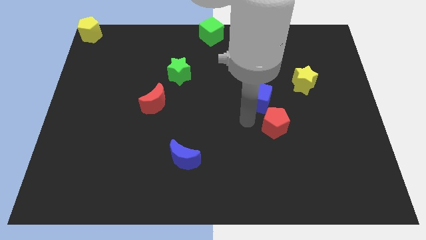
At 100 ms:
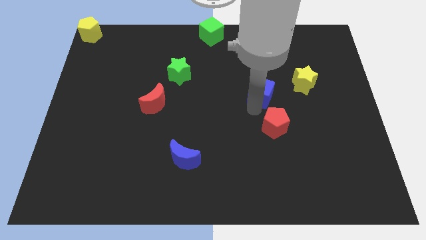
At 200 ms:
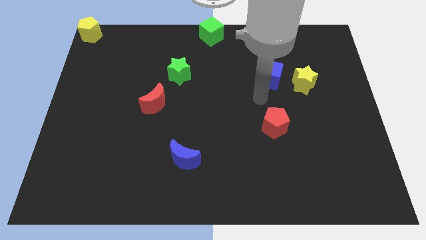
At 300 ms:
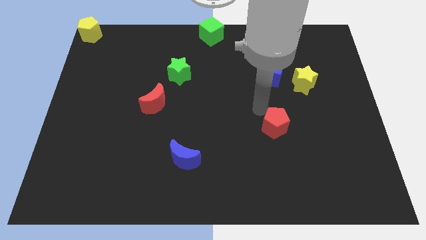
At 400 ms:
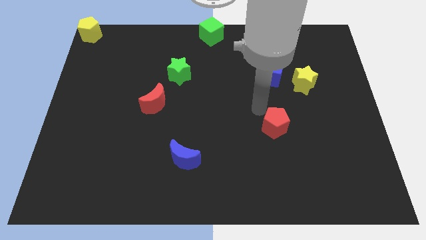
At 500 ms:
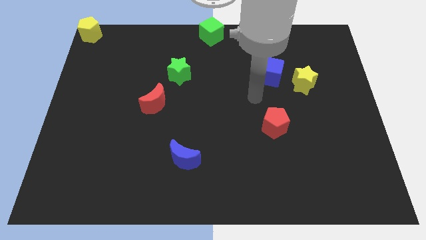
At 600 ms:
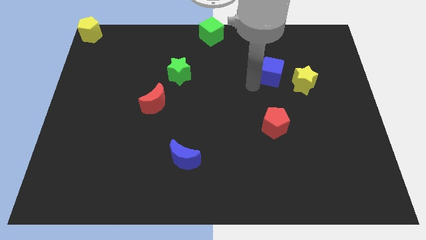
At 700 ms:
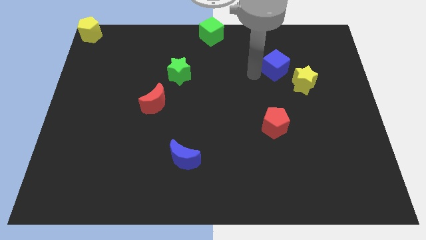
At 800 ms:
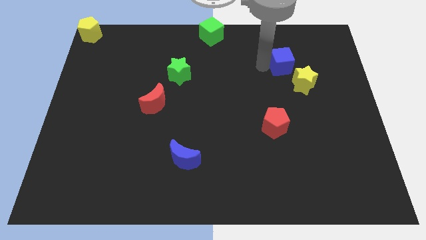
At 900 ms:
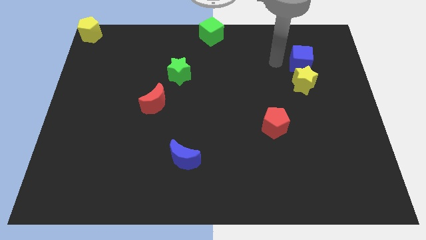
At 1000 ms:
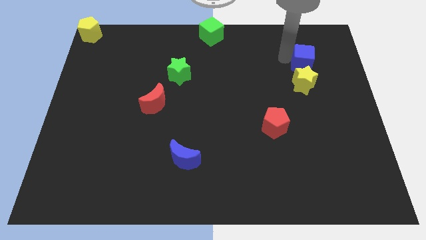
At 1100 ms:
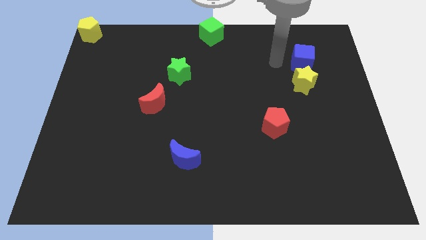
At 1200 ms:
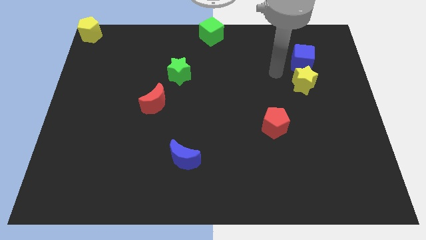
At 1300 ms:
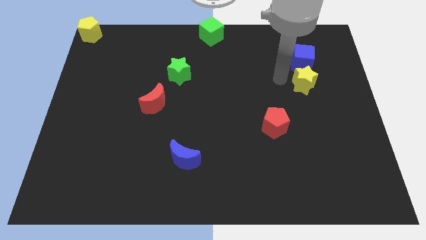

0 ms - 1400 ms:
move the blue cube to the top left side of yellow star

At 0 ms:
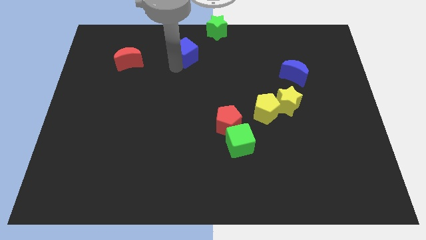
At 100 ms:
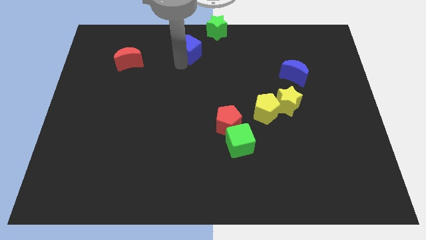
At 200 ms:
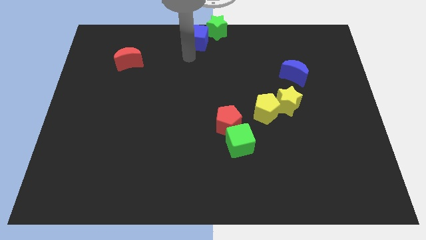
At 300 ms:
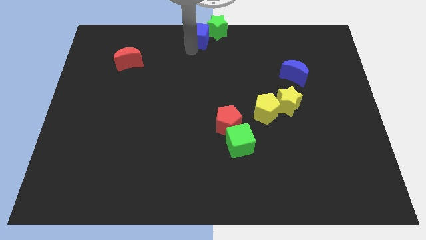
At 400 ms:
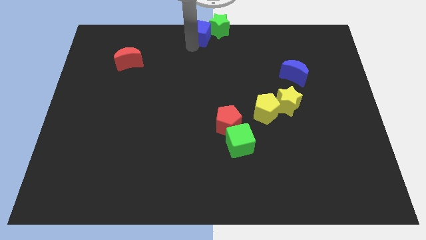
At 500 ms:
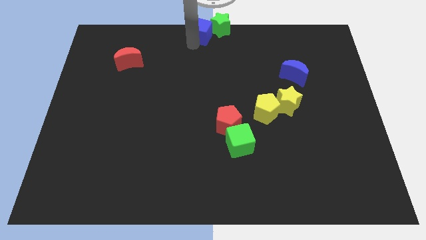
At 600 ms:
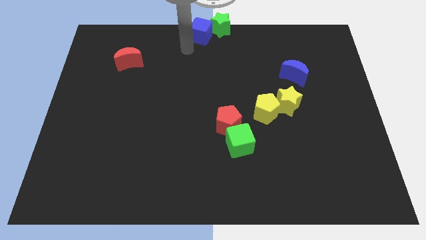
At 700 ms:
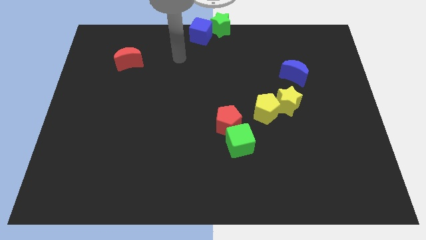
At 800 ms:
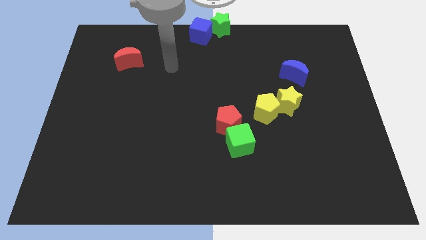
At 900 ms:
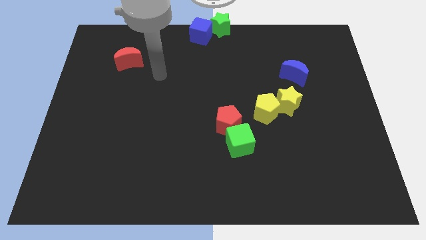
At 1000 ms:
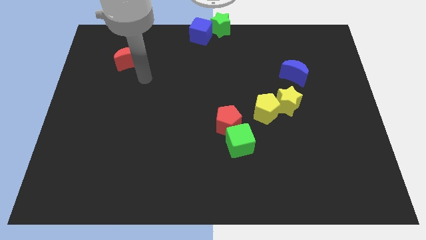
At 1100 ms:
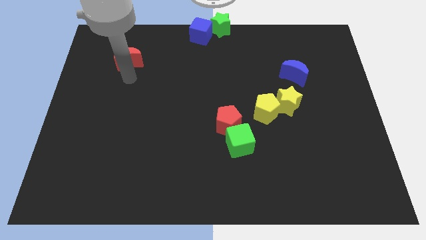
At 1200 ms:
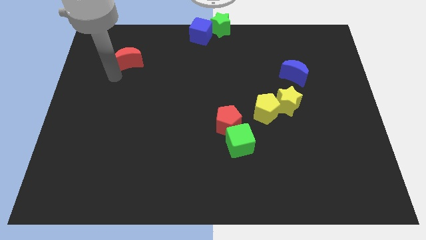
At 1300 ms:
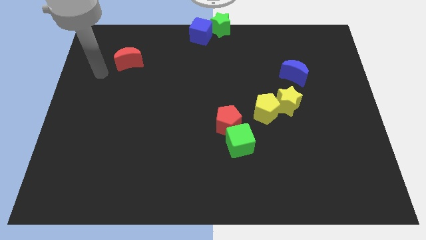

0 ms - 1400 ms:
put blue cube into green star

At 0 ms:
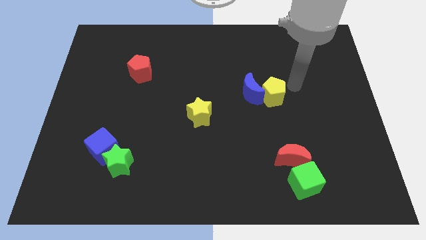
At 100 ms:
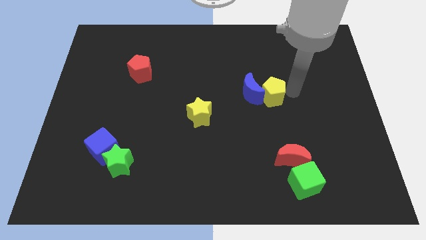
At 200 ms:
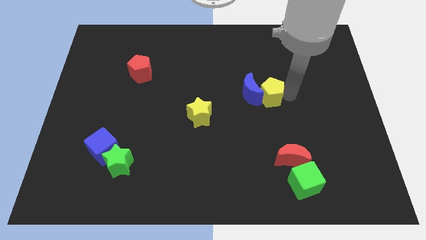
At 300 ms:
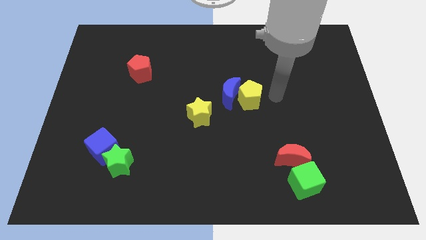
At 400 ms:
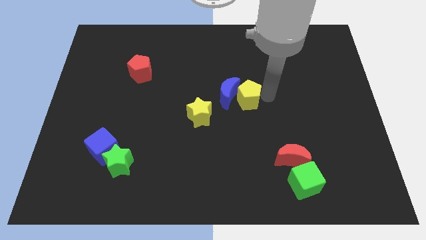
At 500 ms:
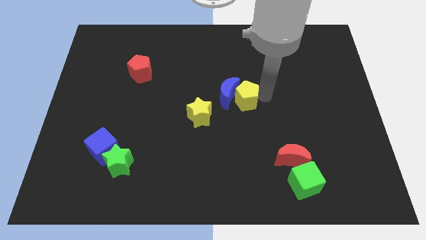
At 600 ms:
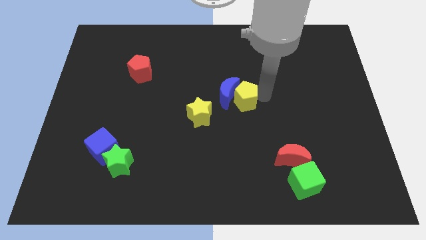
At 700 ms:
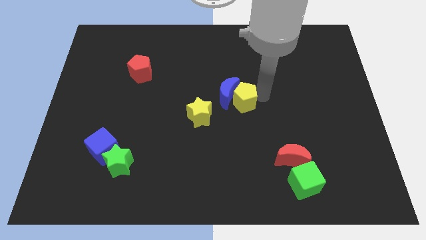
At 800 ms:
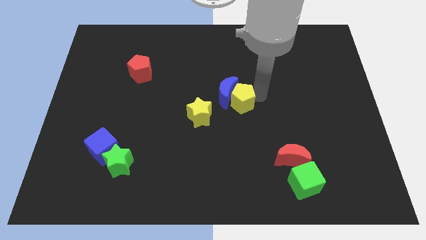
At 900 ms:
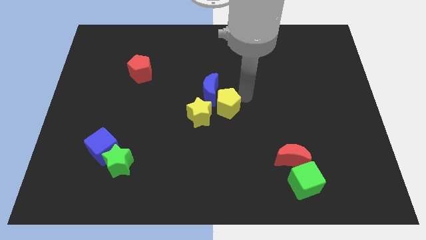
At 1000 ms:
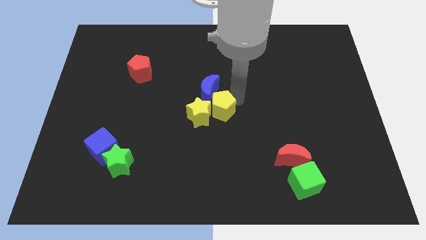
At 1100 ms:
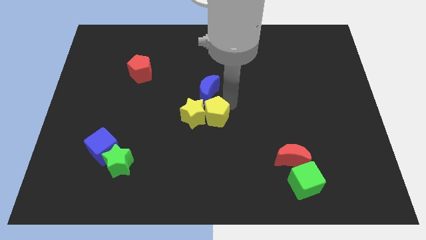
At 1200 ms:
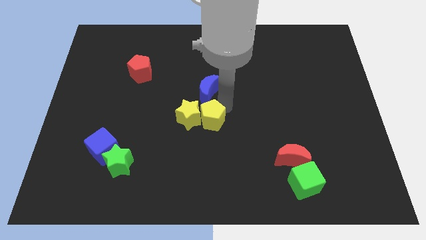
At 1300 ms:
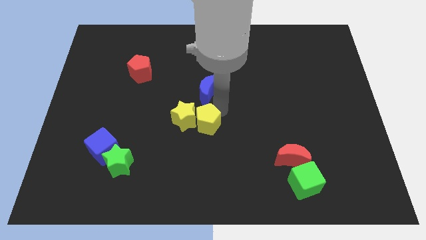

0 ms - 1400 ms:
move yellow pentagon into yellow star

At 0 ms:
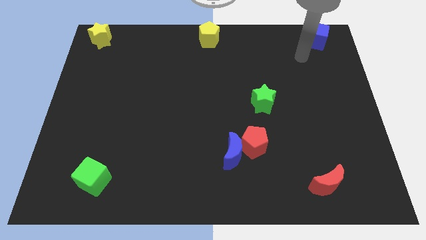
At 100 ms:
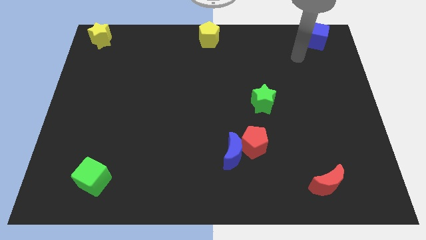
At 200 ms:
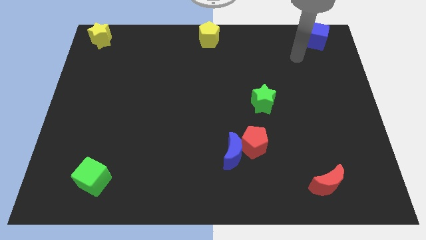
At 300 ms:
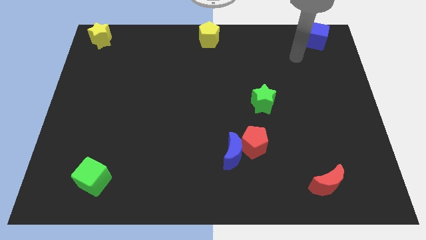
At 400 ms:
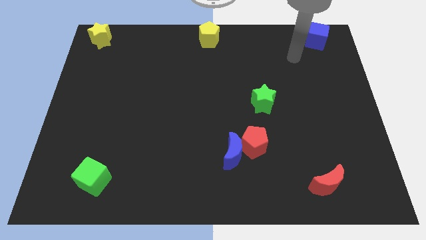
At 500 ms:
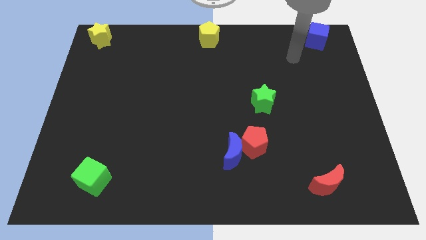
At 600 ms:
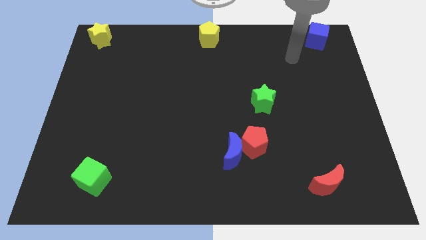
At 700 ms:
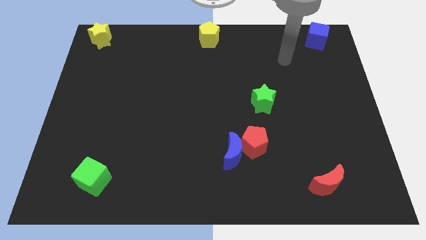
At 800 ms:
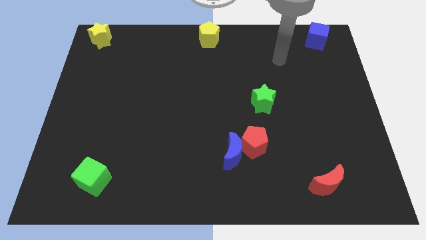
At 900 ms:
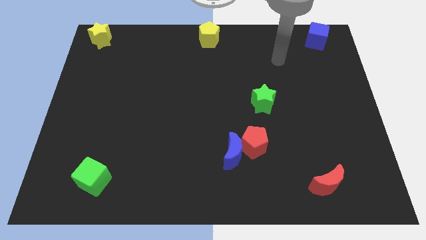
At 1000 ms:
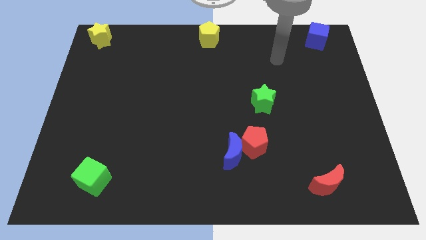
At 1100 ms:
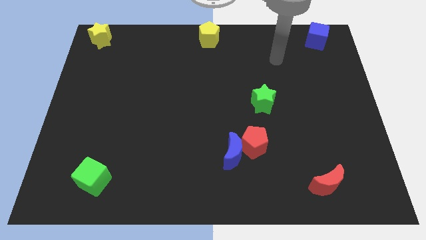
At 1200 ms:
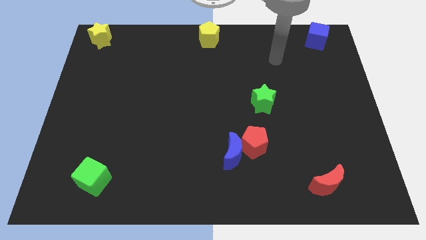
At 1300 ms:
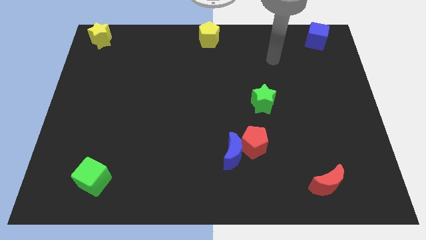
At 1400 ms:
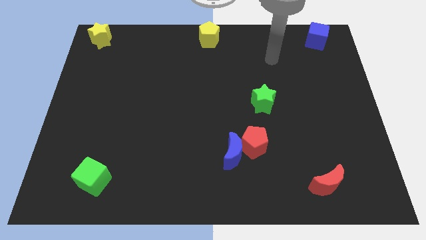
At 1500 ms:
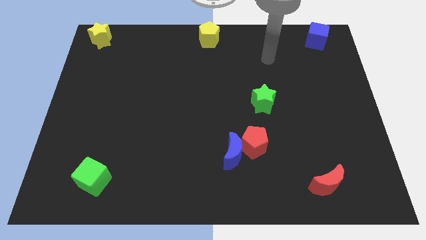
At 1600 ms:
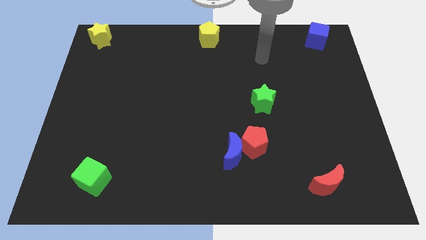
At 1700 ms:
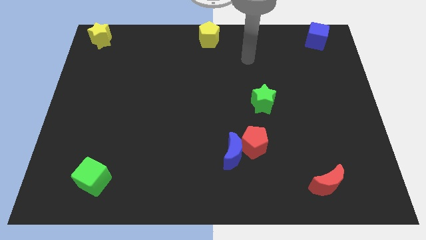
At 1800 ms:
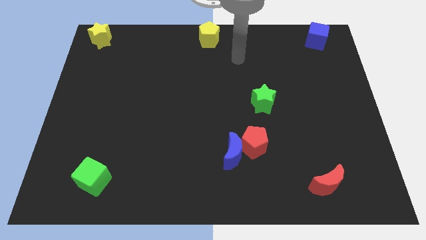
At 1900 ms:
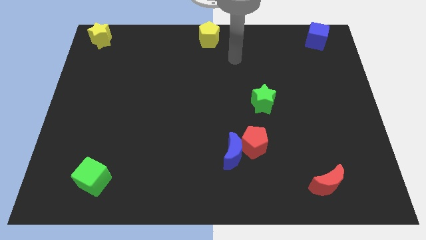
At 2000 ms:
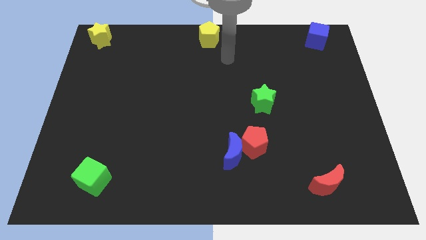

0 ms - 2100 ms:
move the arm away from the blue cube

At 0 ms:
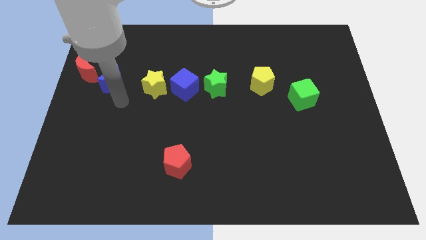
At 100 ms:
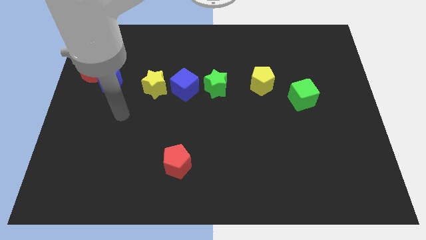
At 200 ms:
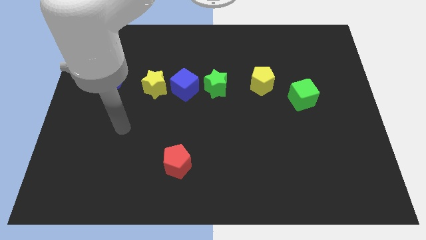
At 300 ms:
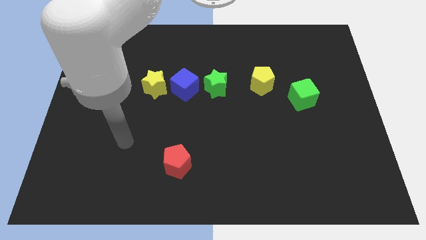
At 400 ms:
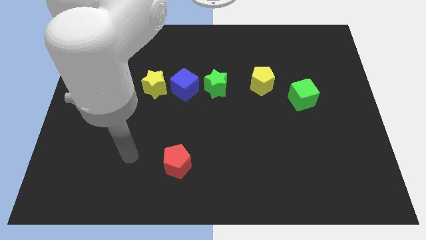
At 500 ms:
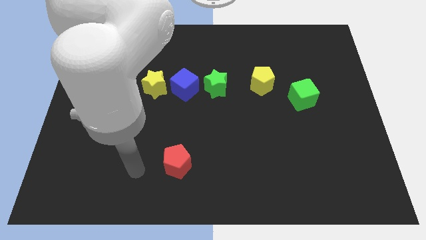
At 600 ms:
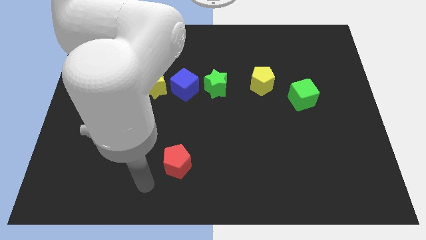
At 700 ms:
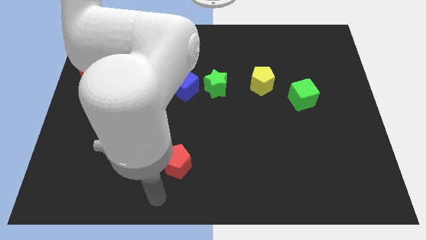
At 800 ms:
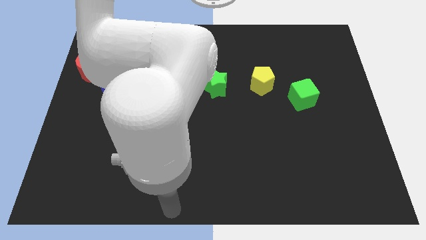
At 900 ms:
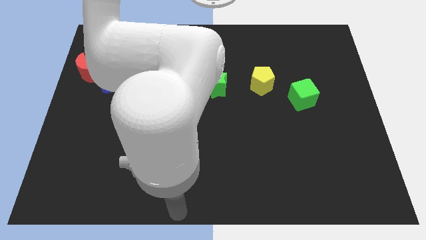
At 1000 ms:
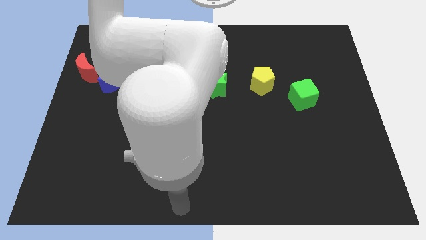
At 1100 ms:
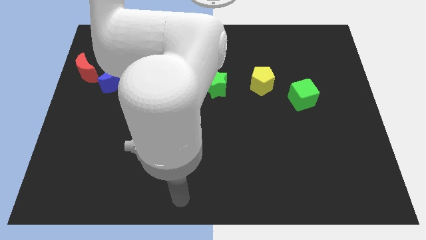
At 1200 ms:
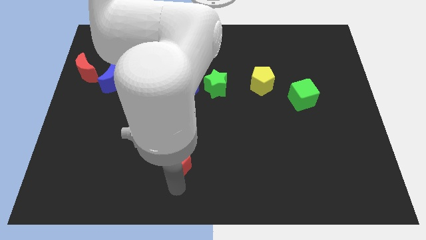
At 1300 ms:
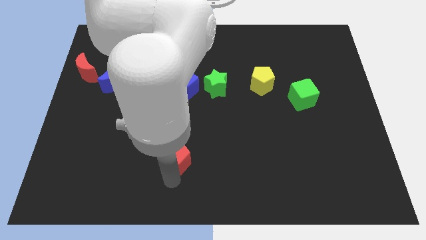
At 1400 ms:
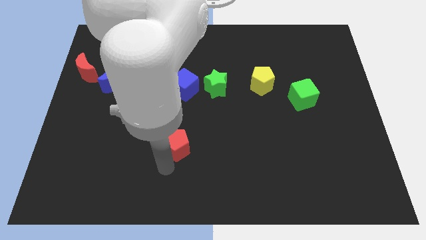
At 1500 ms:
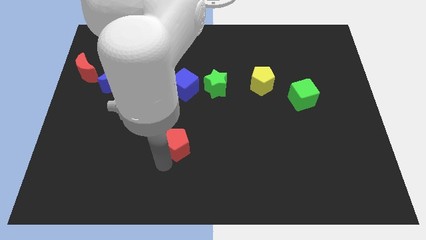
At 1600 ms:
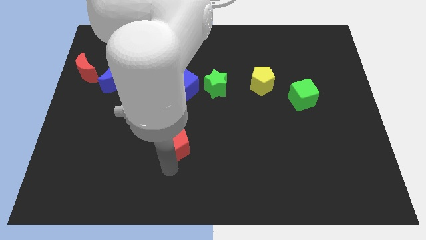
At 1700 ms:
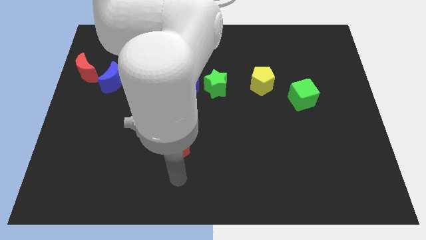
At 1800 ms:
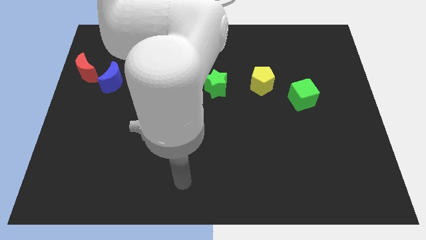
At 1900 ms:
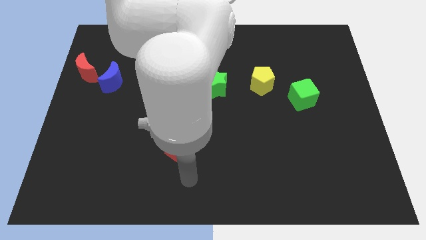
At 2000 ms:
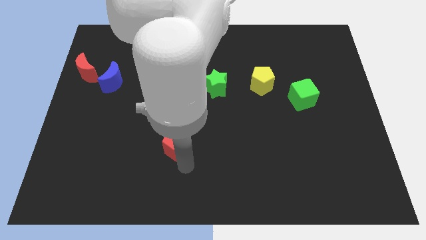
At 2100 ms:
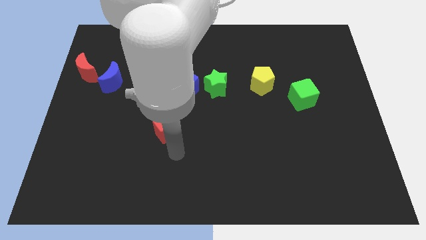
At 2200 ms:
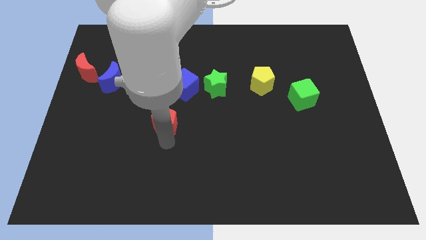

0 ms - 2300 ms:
move the red pentagon to the bottom left of the blue cube

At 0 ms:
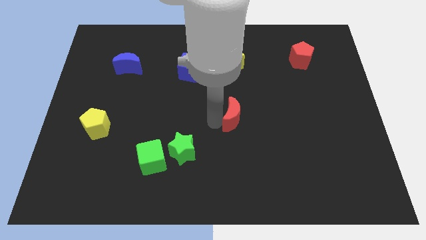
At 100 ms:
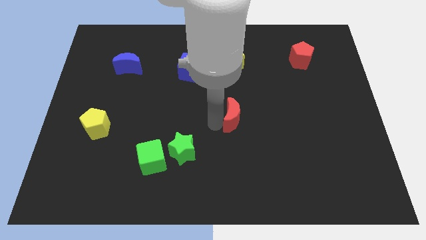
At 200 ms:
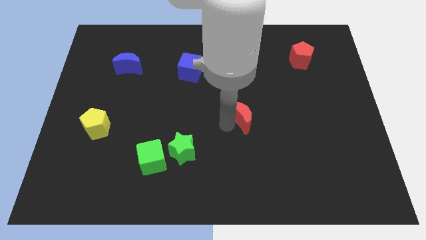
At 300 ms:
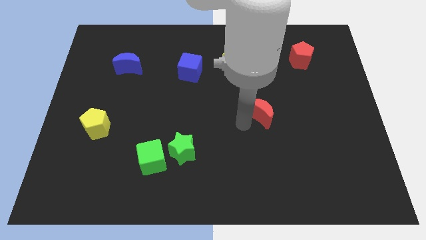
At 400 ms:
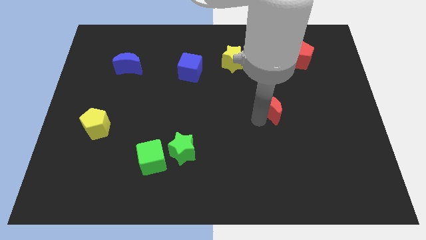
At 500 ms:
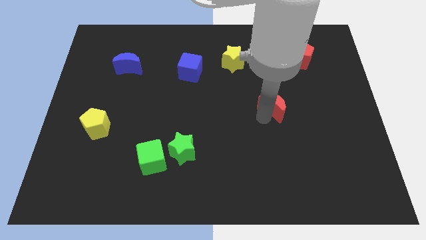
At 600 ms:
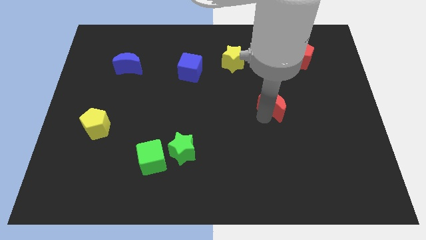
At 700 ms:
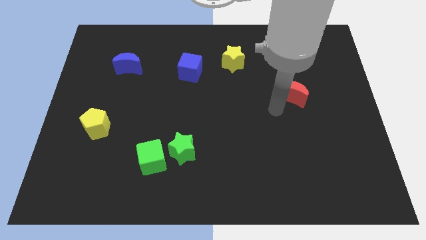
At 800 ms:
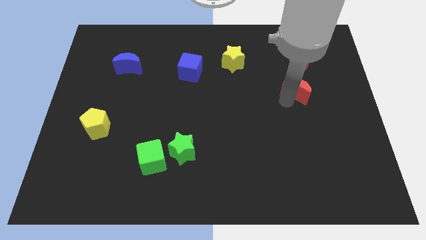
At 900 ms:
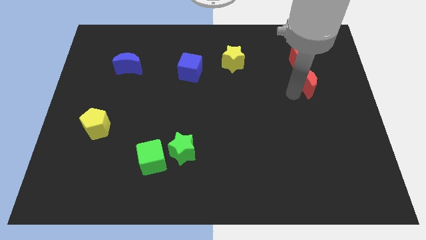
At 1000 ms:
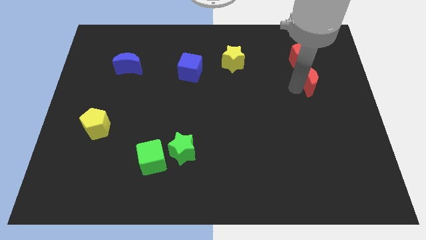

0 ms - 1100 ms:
place the red crescent below the red pentagon
